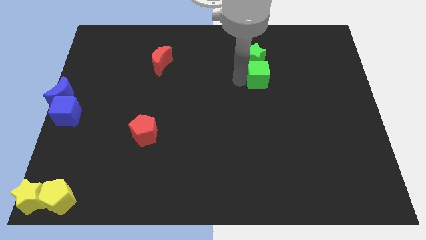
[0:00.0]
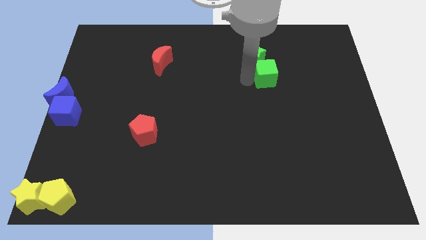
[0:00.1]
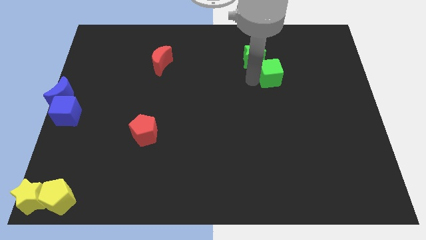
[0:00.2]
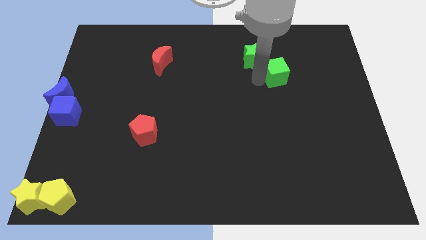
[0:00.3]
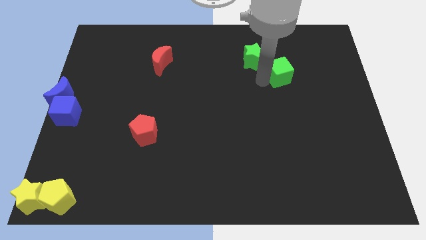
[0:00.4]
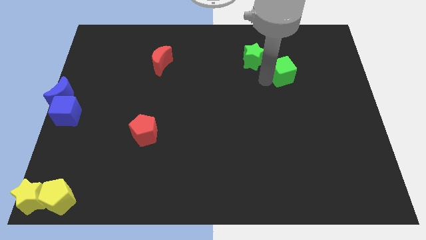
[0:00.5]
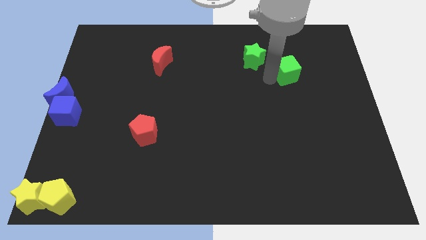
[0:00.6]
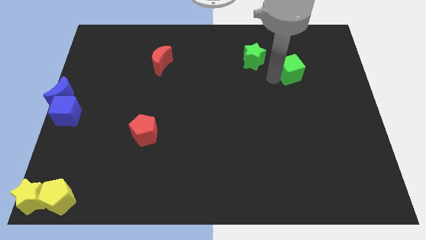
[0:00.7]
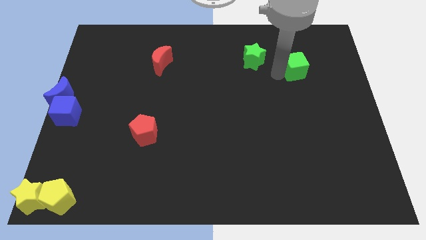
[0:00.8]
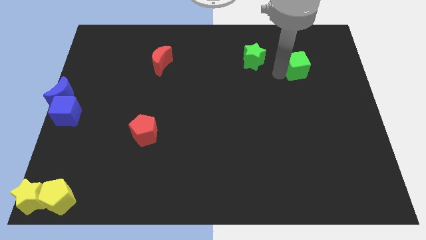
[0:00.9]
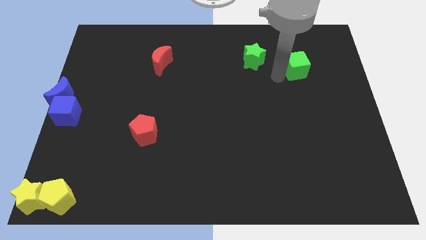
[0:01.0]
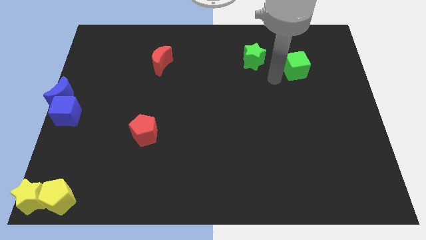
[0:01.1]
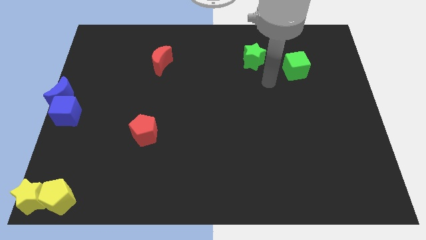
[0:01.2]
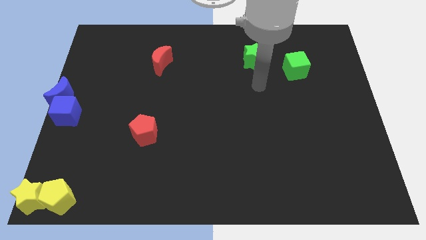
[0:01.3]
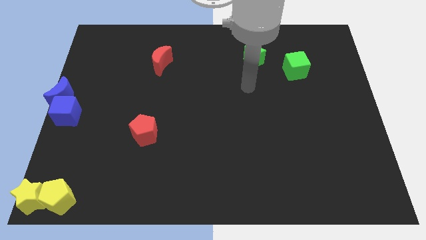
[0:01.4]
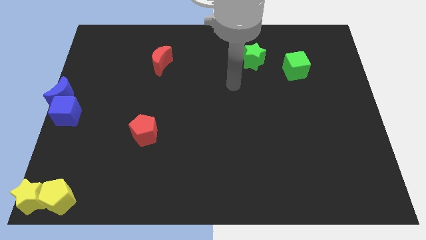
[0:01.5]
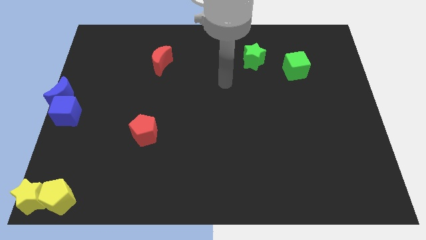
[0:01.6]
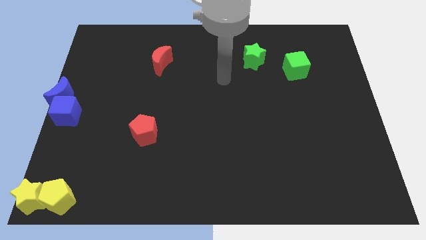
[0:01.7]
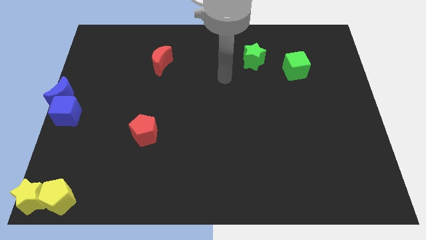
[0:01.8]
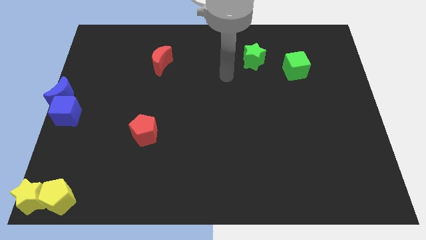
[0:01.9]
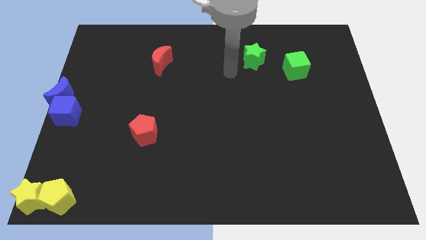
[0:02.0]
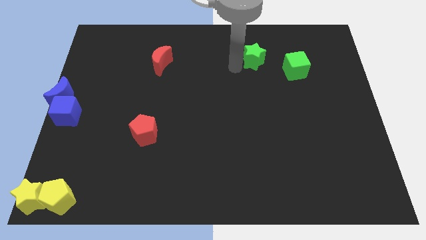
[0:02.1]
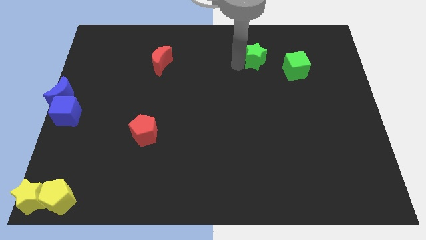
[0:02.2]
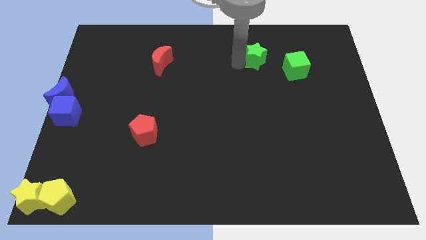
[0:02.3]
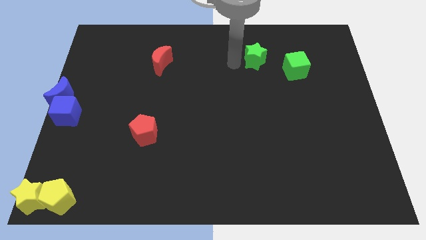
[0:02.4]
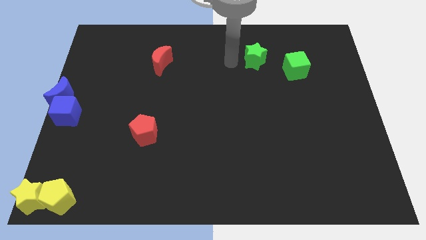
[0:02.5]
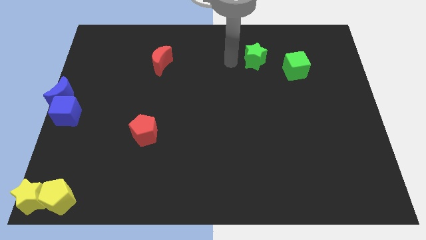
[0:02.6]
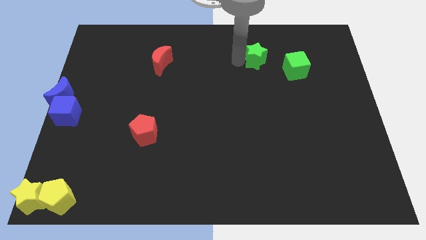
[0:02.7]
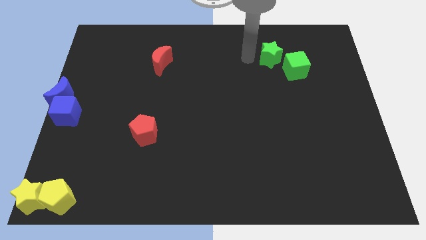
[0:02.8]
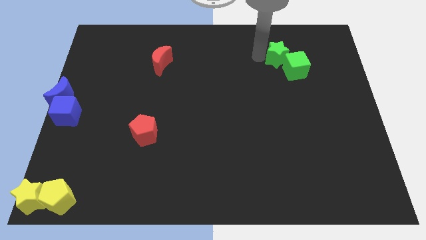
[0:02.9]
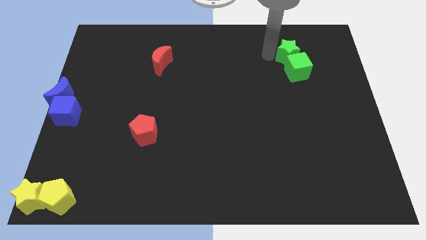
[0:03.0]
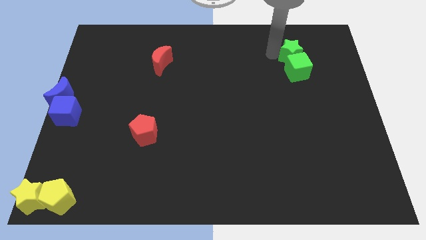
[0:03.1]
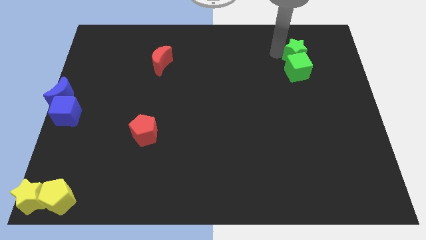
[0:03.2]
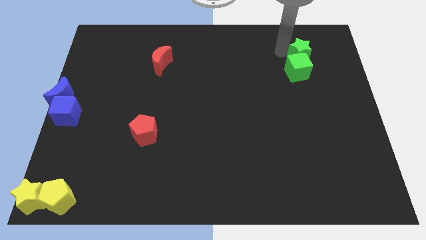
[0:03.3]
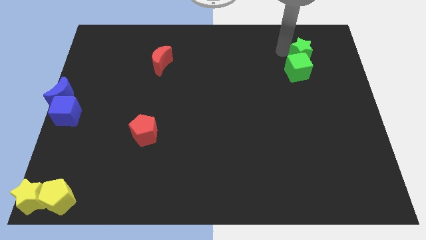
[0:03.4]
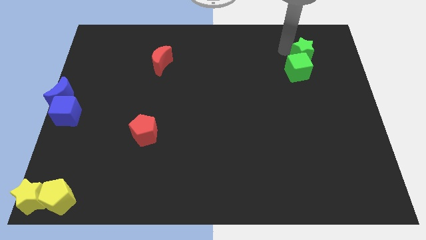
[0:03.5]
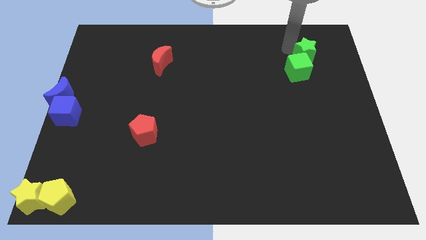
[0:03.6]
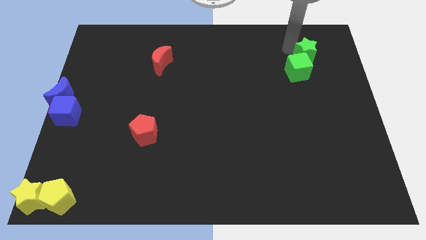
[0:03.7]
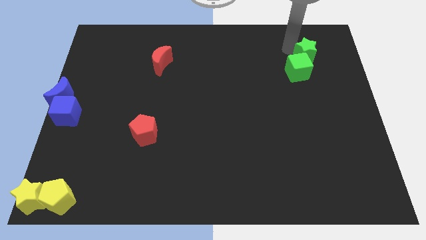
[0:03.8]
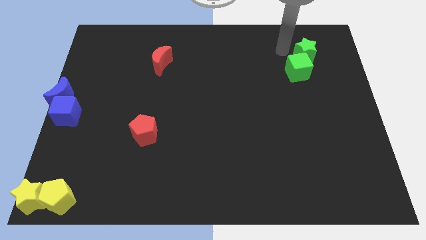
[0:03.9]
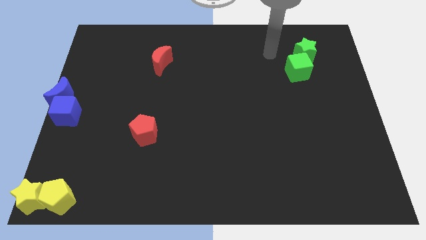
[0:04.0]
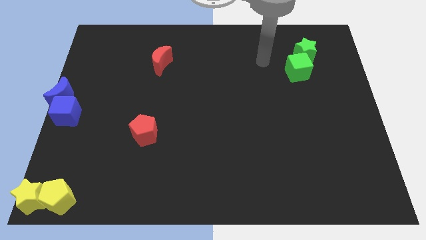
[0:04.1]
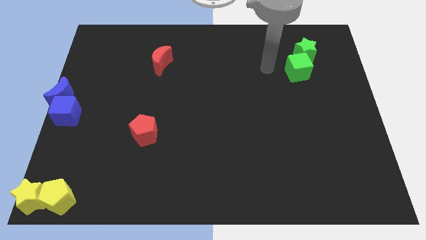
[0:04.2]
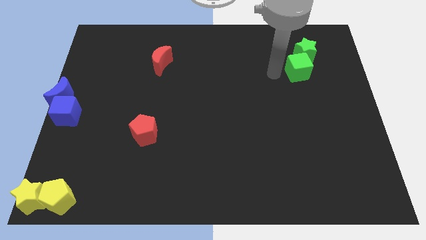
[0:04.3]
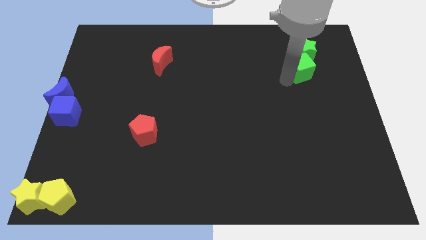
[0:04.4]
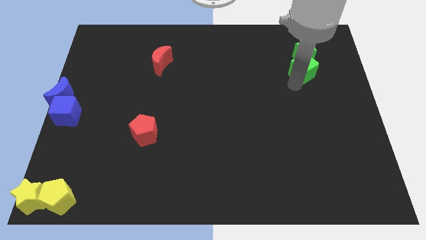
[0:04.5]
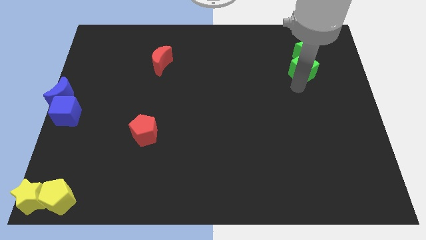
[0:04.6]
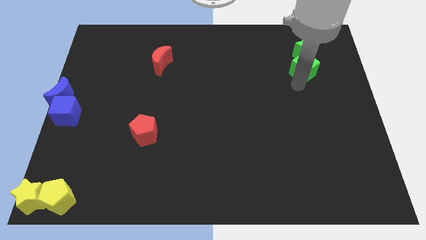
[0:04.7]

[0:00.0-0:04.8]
move the group of green blocks to the right

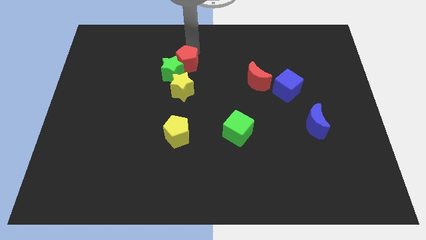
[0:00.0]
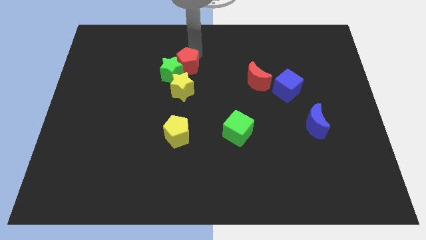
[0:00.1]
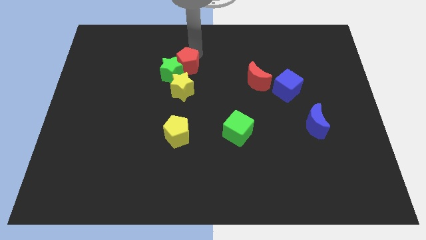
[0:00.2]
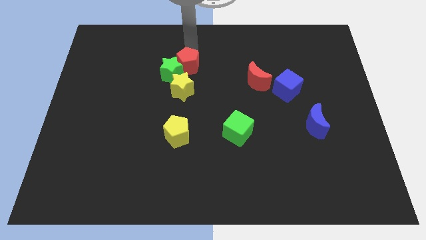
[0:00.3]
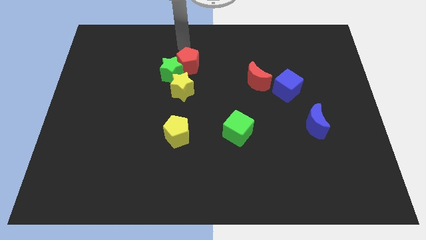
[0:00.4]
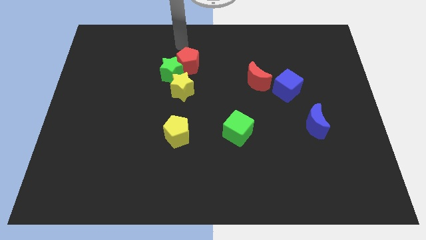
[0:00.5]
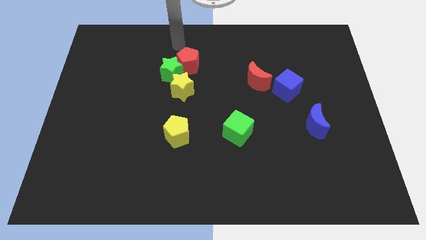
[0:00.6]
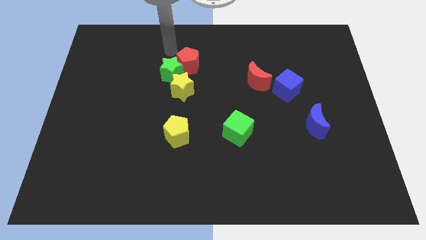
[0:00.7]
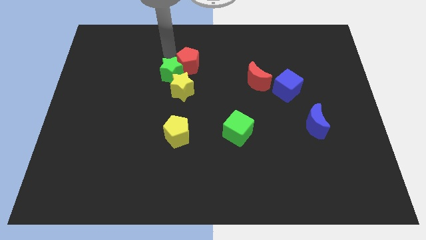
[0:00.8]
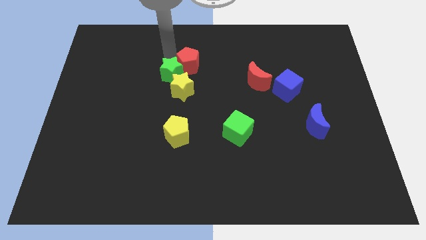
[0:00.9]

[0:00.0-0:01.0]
point the arm above the green star

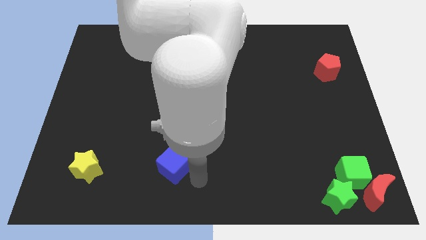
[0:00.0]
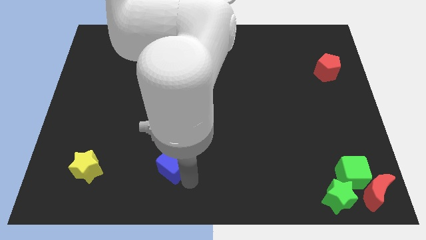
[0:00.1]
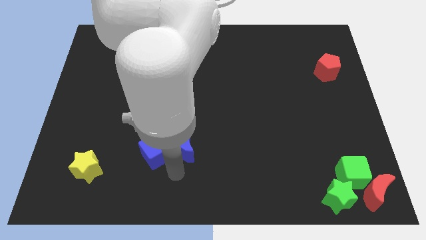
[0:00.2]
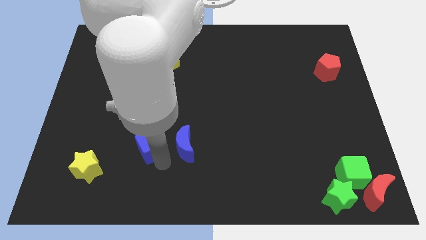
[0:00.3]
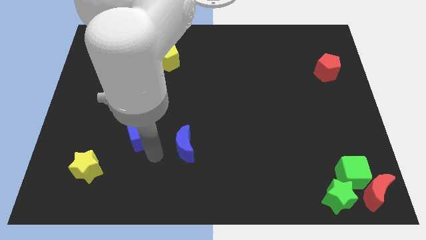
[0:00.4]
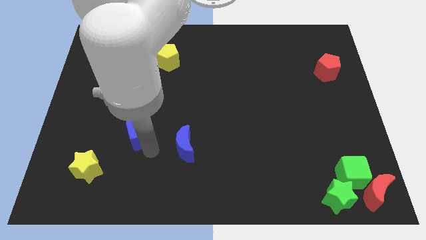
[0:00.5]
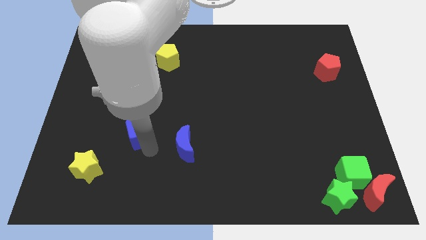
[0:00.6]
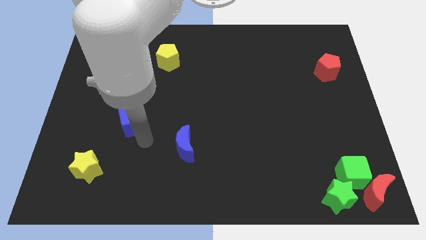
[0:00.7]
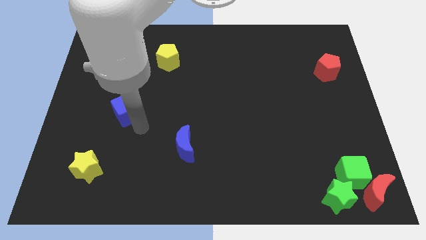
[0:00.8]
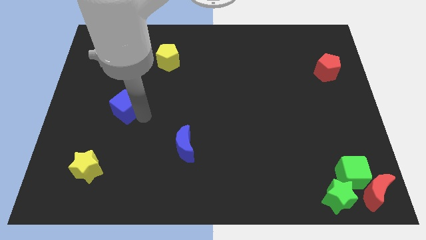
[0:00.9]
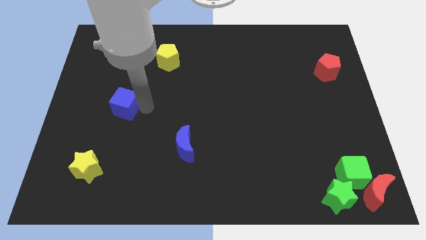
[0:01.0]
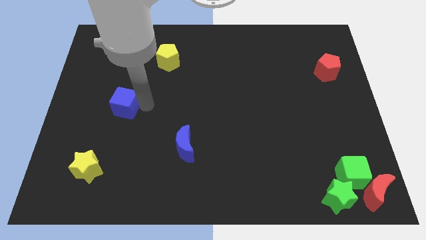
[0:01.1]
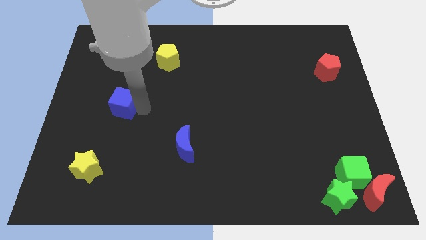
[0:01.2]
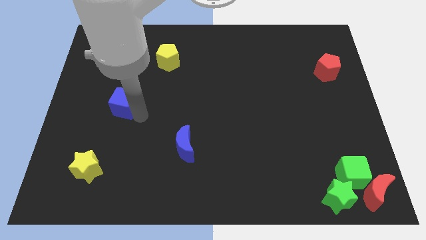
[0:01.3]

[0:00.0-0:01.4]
move the blue cube to the top left side of the blue moon

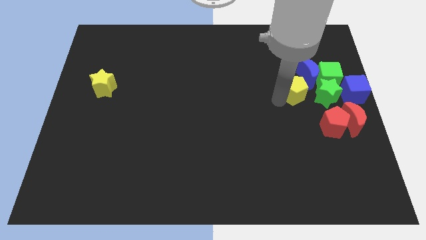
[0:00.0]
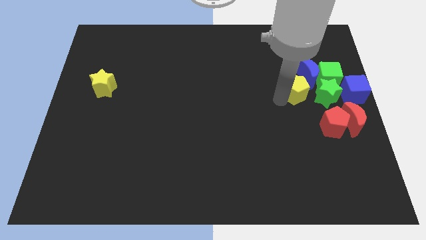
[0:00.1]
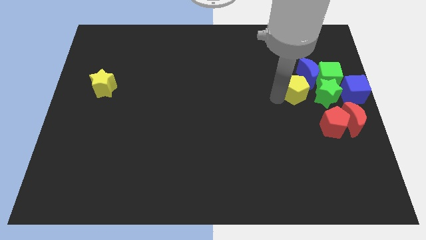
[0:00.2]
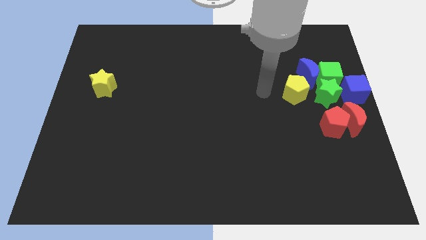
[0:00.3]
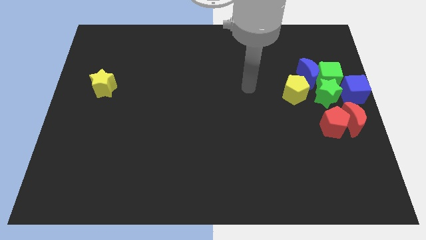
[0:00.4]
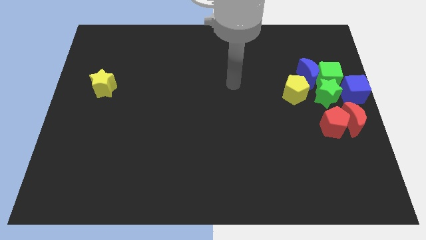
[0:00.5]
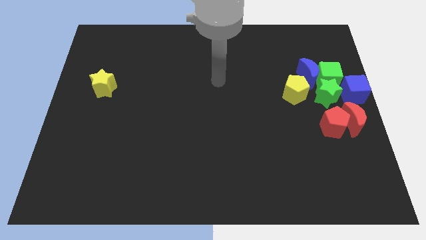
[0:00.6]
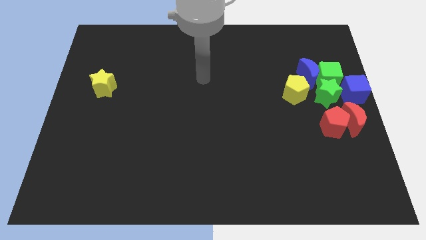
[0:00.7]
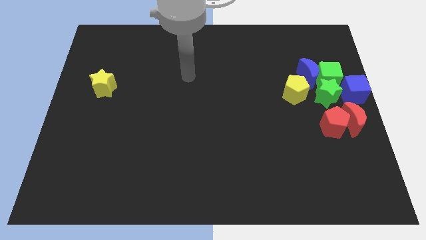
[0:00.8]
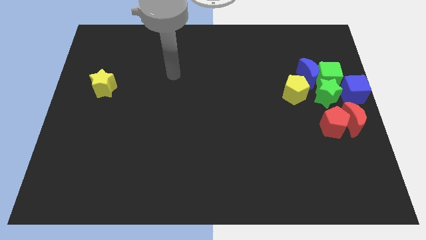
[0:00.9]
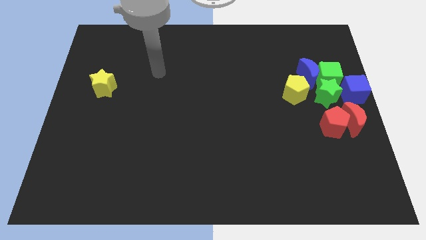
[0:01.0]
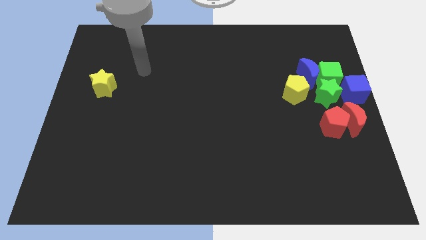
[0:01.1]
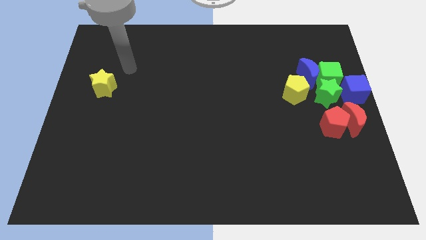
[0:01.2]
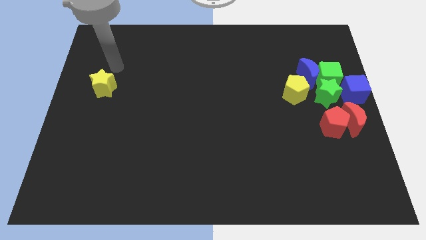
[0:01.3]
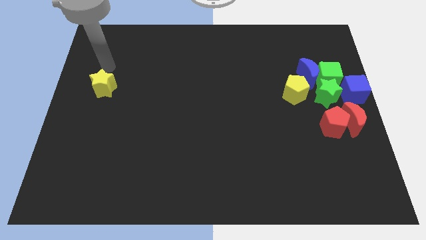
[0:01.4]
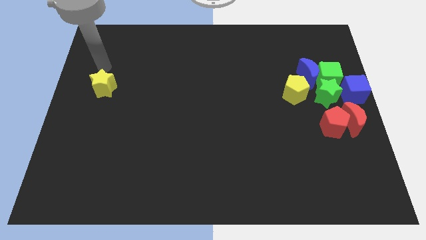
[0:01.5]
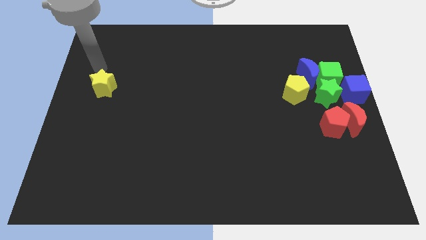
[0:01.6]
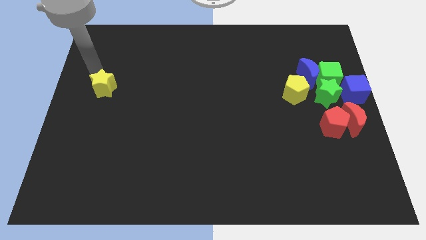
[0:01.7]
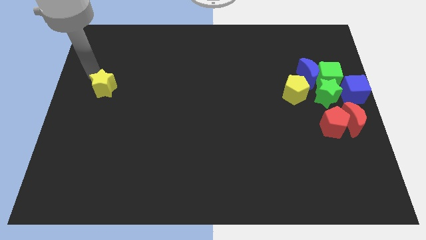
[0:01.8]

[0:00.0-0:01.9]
touch the yellow star with your arm
